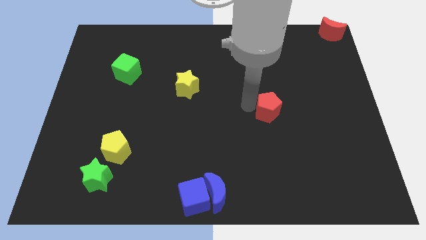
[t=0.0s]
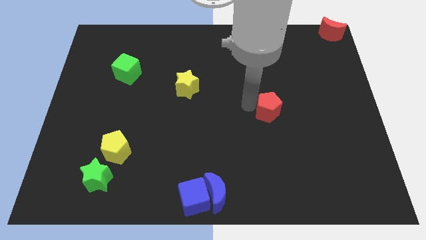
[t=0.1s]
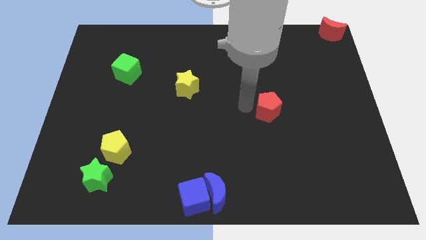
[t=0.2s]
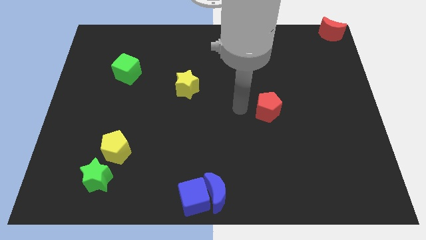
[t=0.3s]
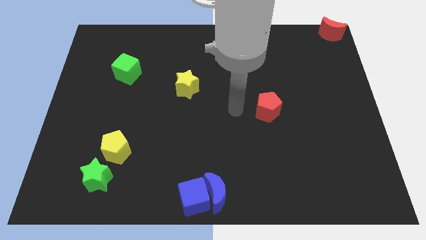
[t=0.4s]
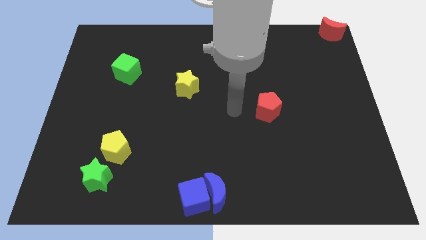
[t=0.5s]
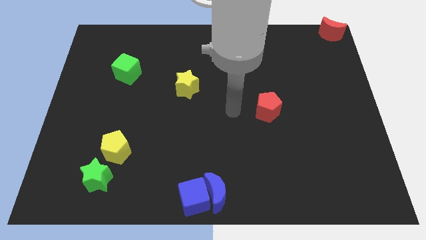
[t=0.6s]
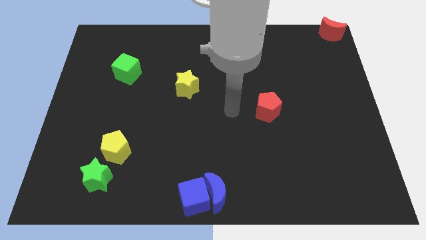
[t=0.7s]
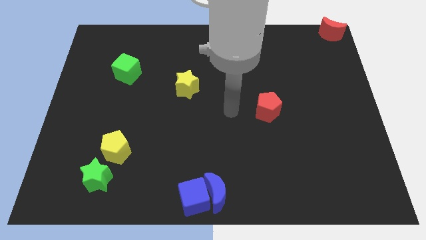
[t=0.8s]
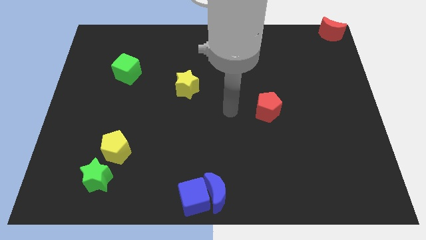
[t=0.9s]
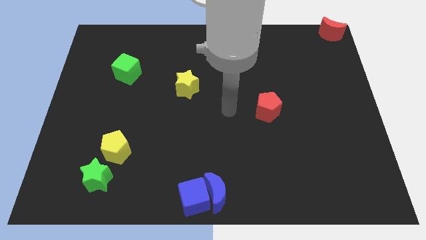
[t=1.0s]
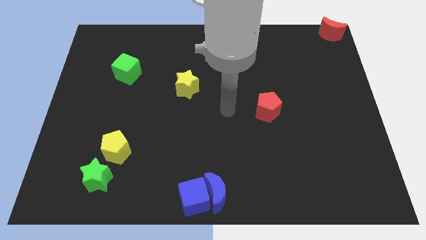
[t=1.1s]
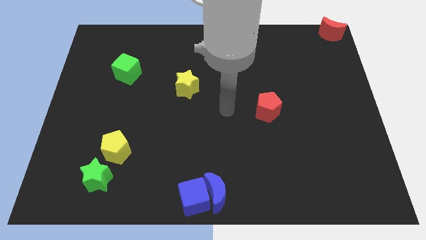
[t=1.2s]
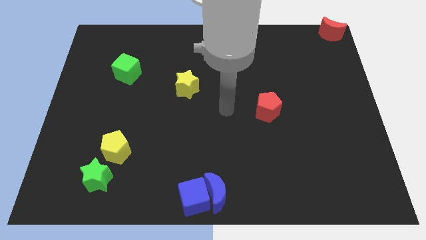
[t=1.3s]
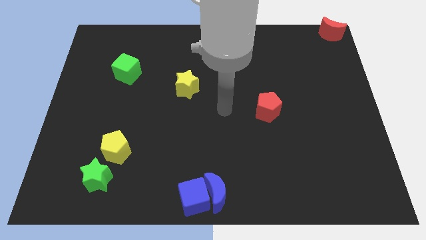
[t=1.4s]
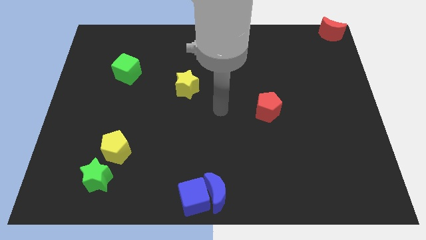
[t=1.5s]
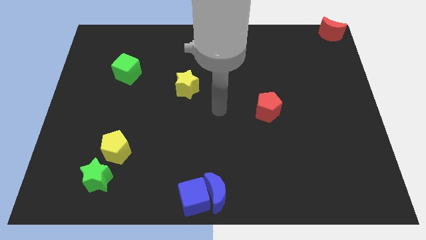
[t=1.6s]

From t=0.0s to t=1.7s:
move the red pentagon slightly to the right

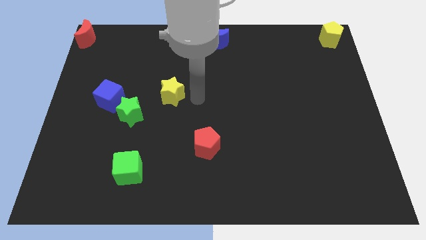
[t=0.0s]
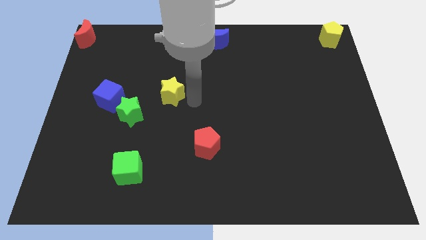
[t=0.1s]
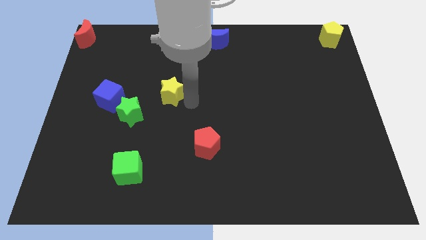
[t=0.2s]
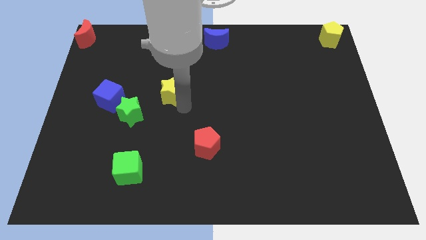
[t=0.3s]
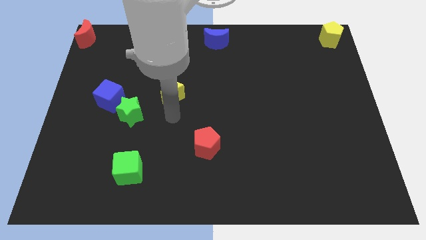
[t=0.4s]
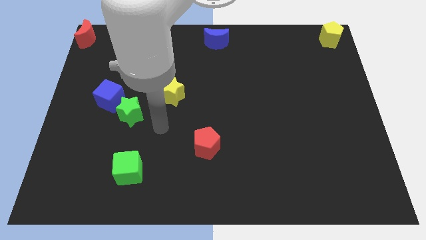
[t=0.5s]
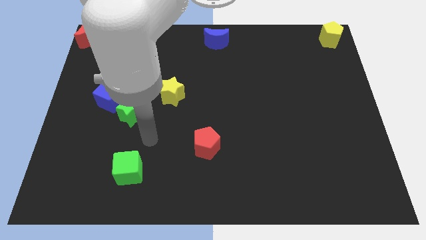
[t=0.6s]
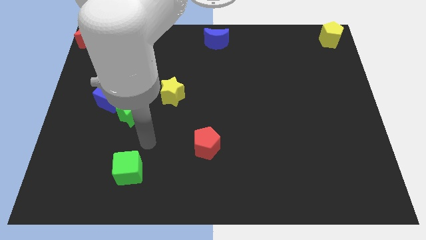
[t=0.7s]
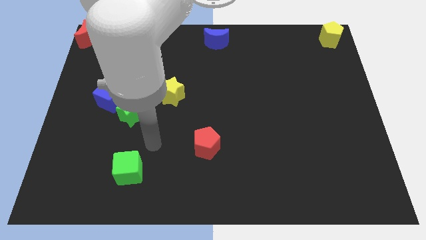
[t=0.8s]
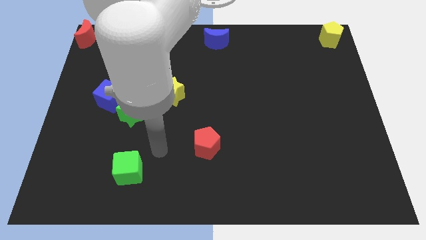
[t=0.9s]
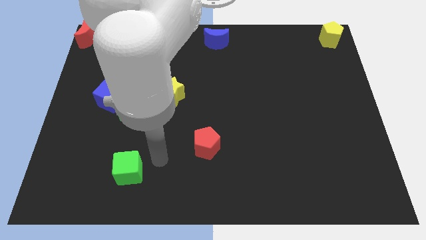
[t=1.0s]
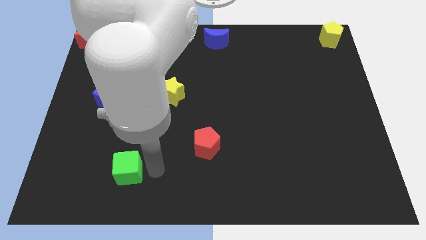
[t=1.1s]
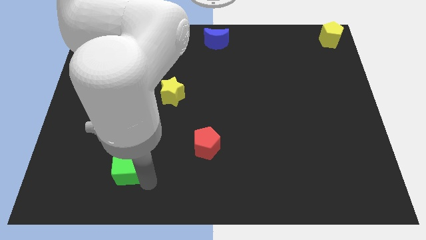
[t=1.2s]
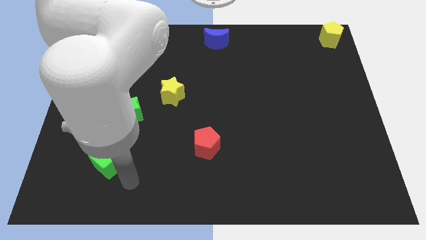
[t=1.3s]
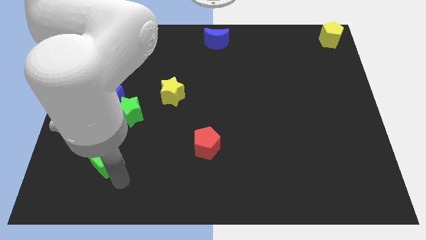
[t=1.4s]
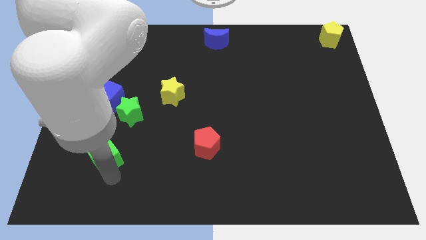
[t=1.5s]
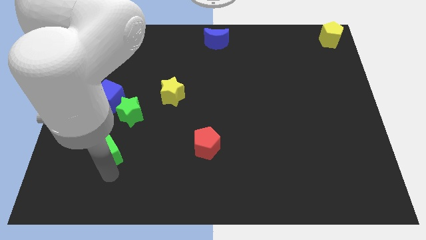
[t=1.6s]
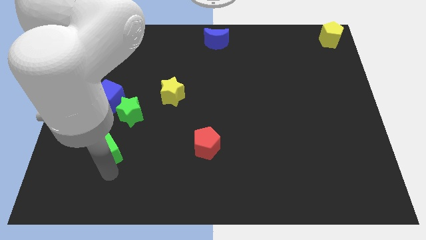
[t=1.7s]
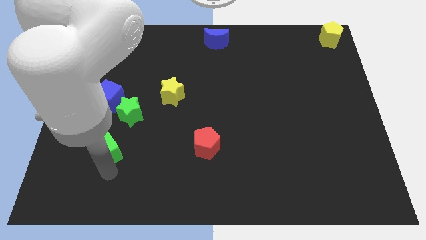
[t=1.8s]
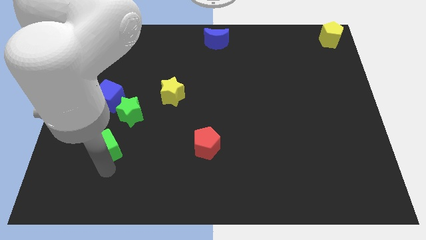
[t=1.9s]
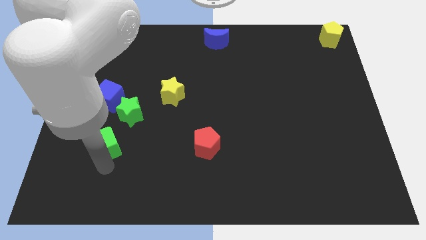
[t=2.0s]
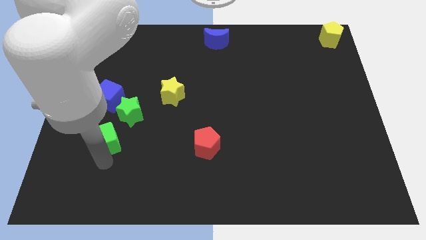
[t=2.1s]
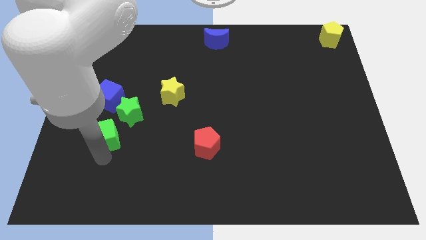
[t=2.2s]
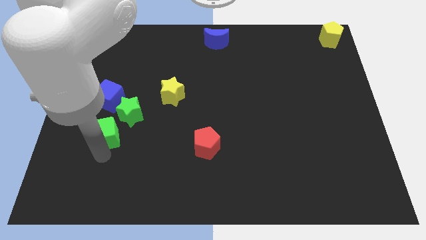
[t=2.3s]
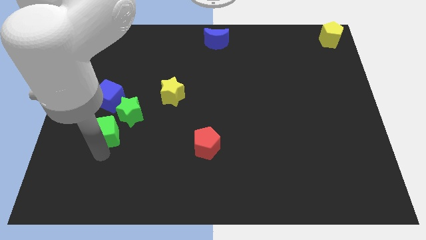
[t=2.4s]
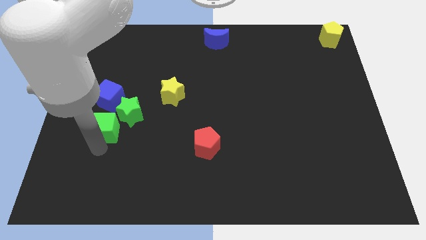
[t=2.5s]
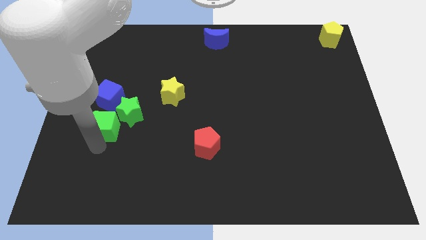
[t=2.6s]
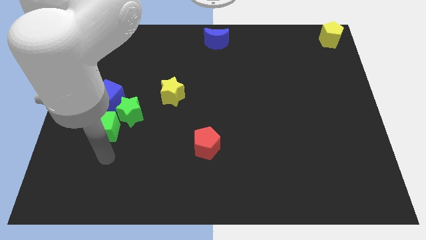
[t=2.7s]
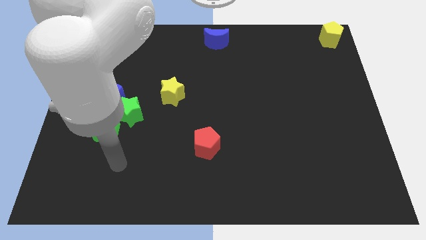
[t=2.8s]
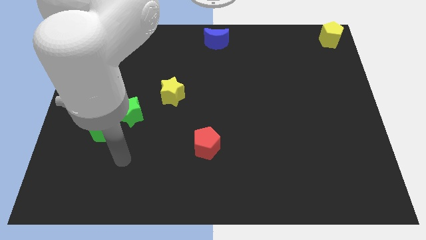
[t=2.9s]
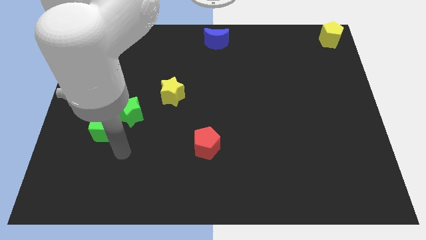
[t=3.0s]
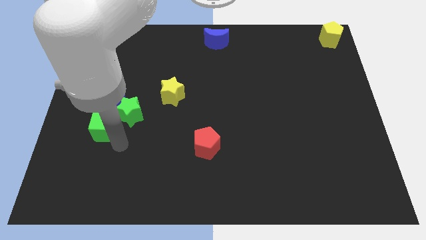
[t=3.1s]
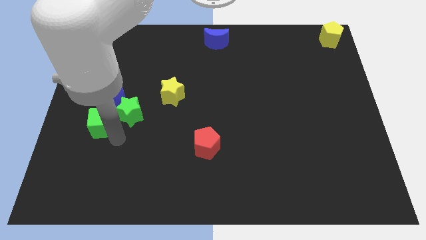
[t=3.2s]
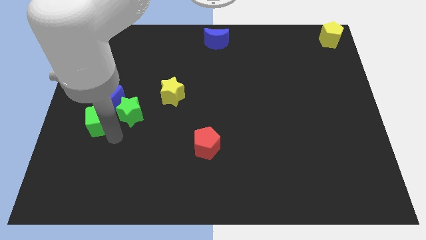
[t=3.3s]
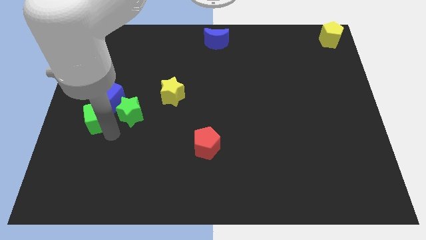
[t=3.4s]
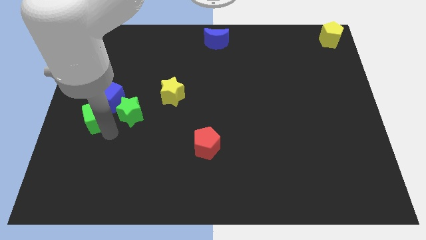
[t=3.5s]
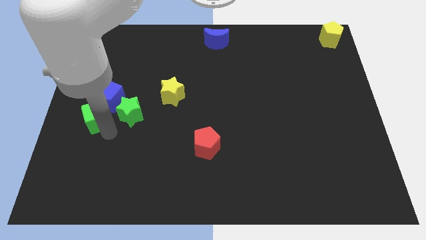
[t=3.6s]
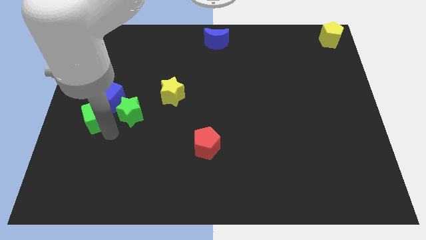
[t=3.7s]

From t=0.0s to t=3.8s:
move the green cube close to the blue cube

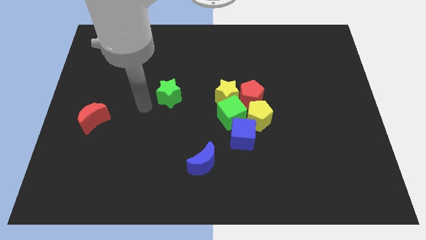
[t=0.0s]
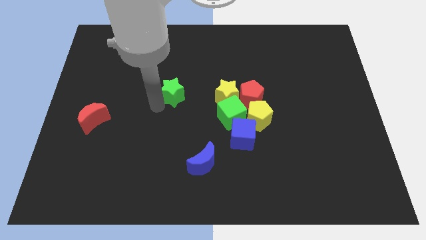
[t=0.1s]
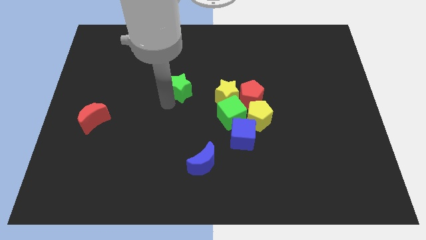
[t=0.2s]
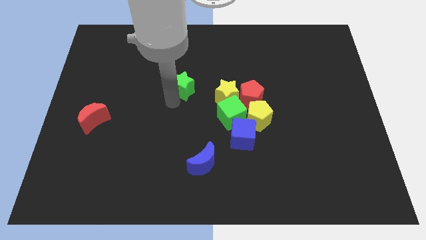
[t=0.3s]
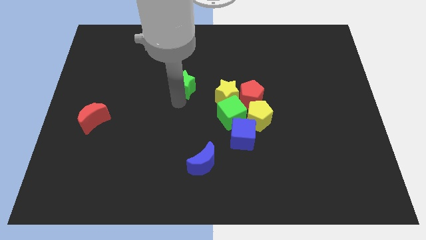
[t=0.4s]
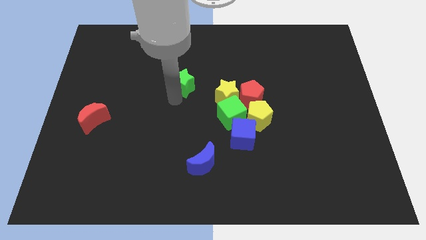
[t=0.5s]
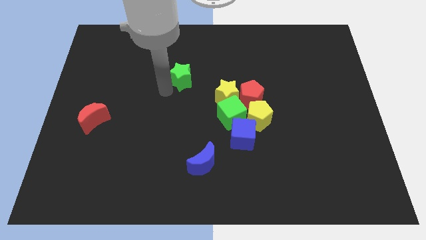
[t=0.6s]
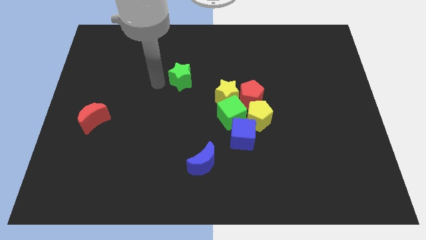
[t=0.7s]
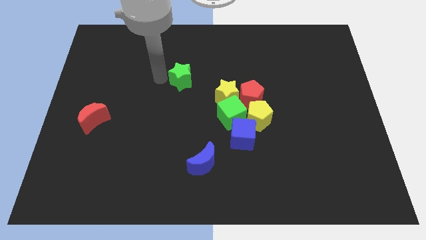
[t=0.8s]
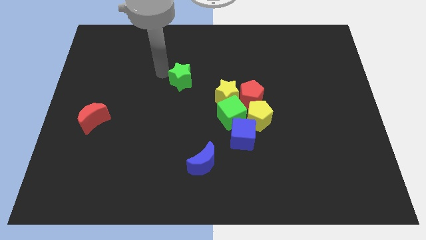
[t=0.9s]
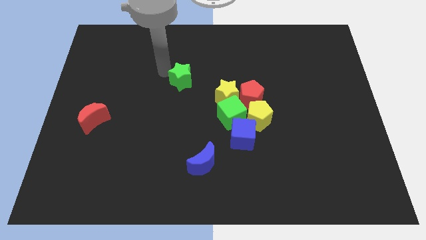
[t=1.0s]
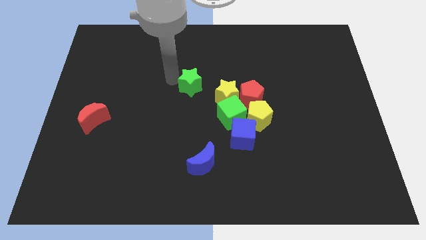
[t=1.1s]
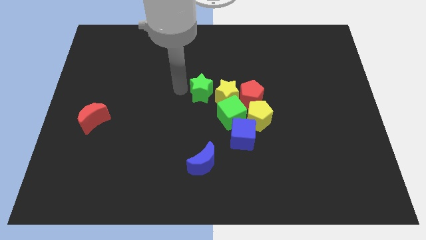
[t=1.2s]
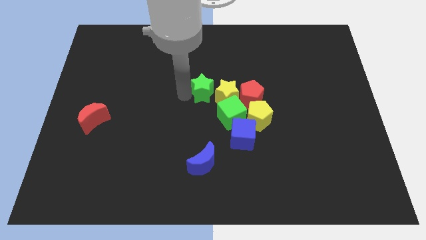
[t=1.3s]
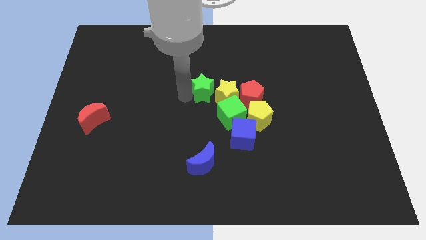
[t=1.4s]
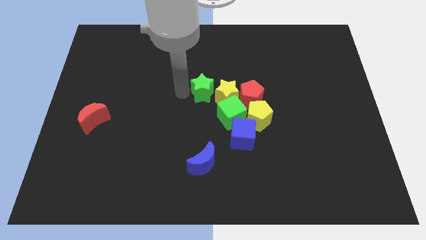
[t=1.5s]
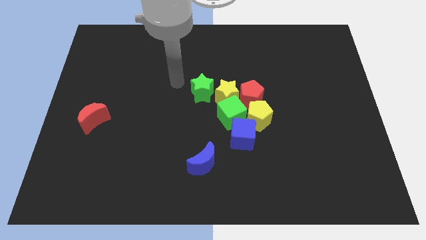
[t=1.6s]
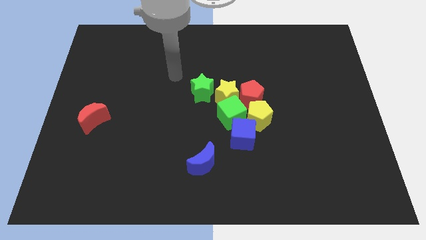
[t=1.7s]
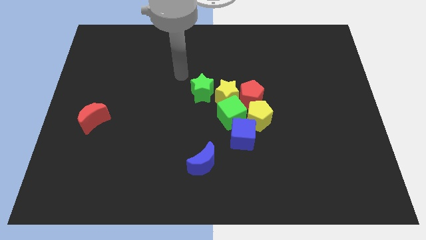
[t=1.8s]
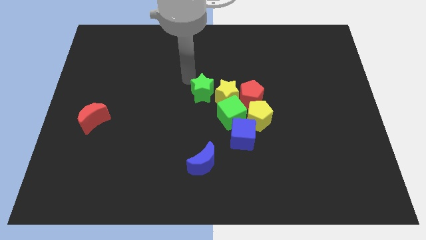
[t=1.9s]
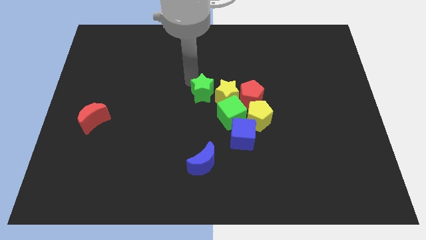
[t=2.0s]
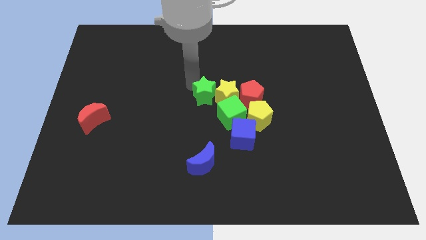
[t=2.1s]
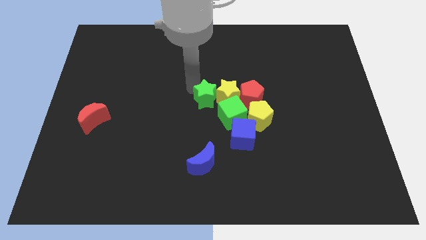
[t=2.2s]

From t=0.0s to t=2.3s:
push the green star into the left of the yellow star

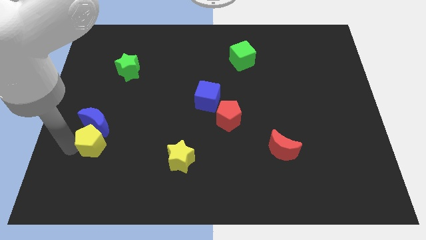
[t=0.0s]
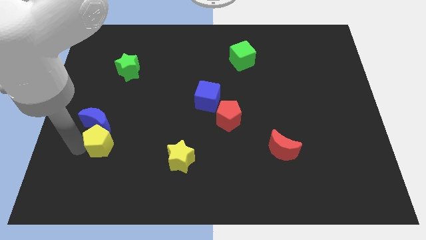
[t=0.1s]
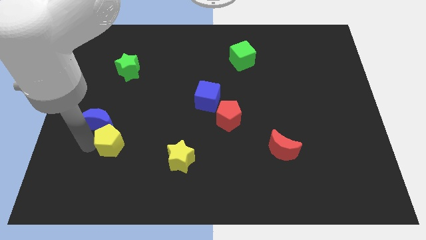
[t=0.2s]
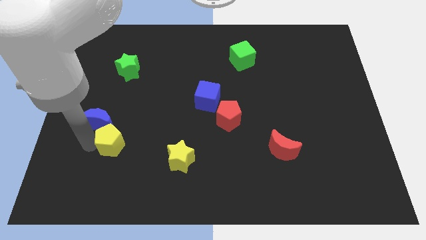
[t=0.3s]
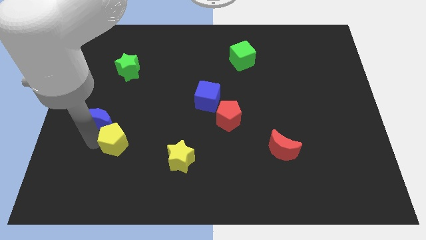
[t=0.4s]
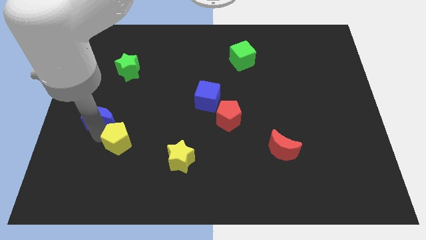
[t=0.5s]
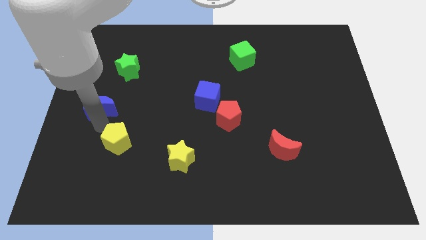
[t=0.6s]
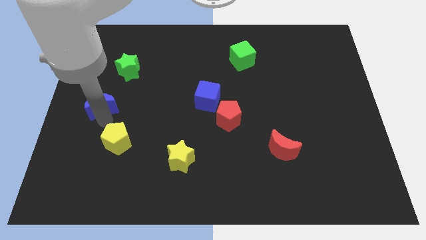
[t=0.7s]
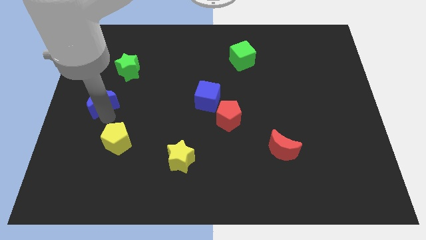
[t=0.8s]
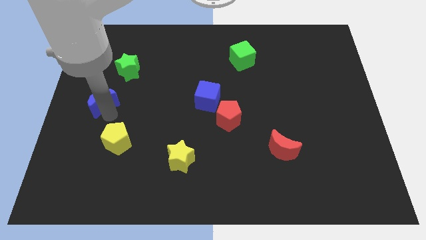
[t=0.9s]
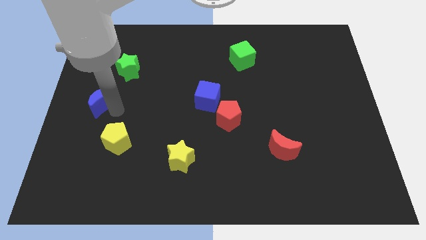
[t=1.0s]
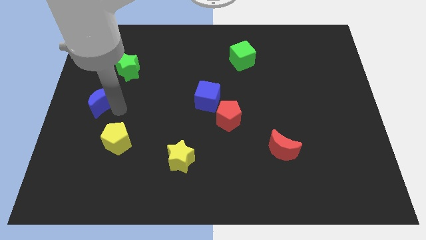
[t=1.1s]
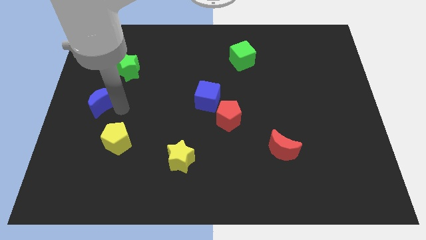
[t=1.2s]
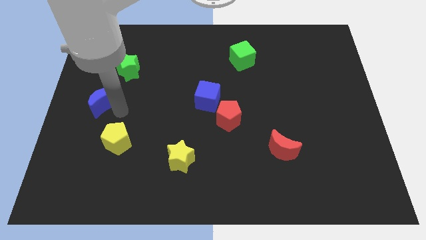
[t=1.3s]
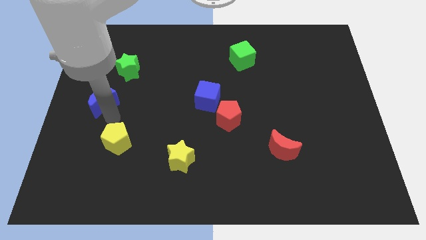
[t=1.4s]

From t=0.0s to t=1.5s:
separate the yellow pentagon and the blue crescent
